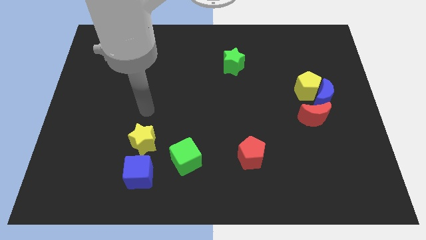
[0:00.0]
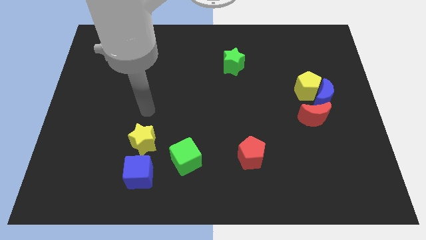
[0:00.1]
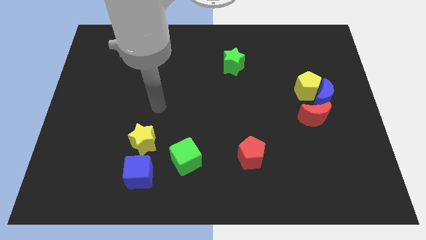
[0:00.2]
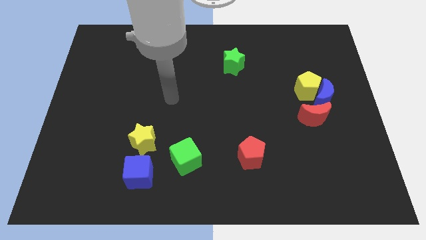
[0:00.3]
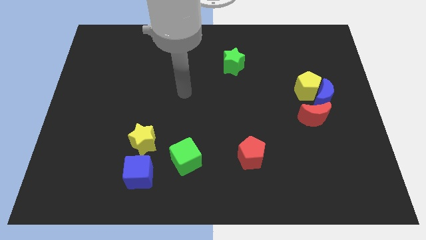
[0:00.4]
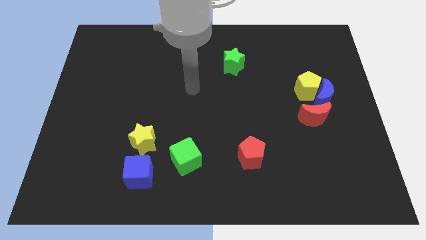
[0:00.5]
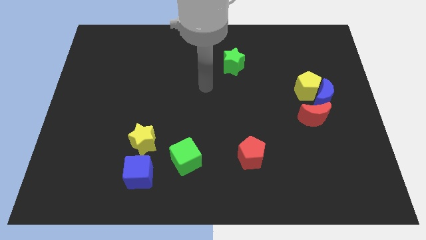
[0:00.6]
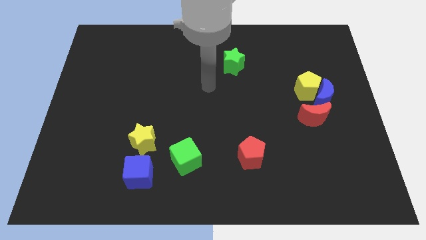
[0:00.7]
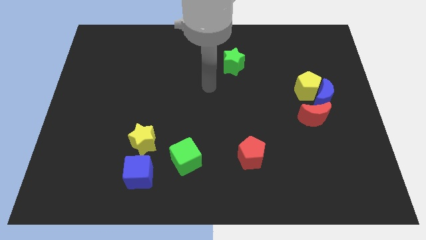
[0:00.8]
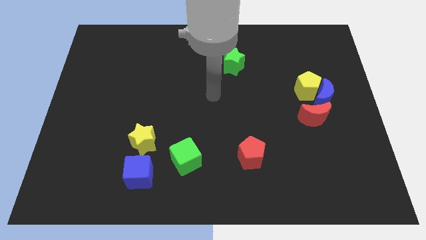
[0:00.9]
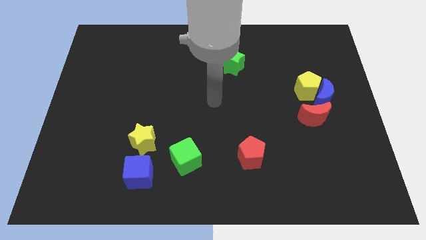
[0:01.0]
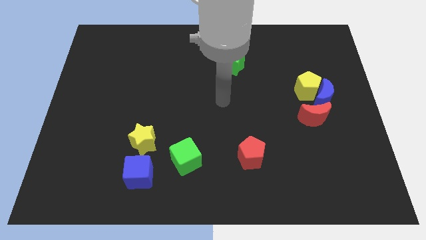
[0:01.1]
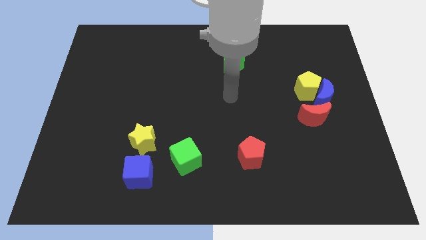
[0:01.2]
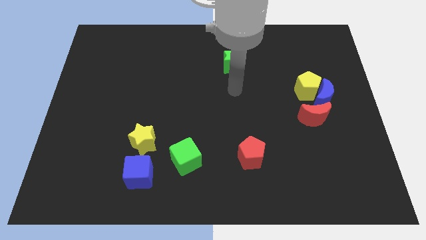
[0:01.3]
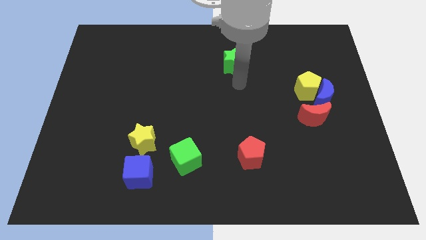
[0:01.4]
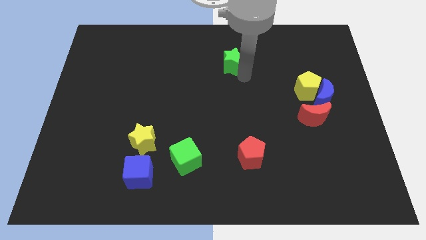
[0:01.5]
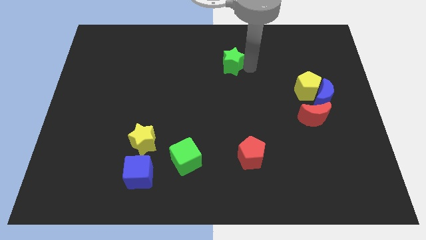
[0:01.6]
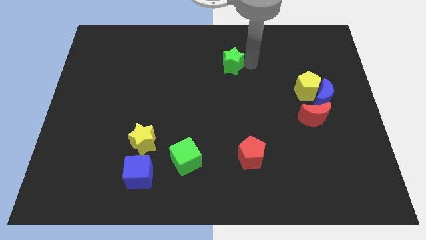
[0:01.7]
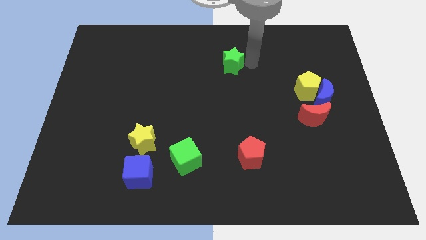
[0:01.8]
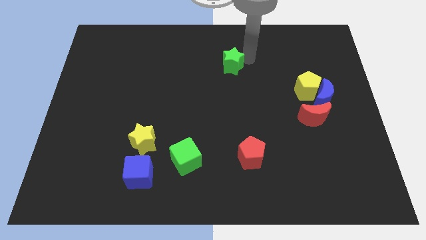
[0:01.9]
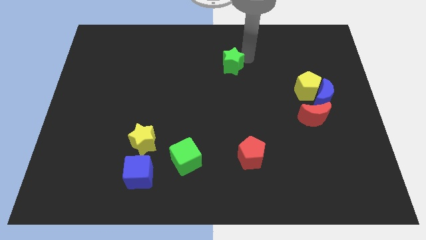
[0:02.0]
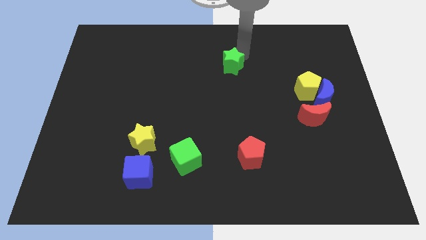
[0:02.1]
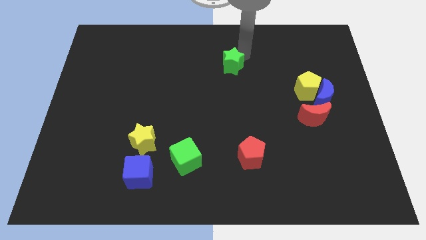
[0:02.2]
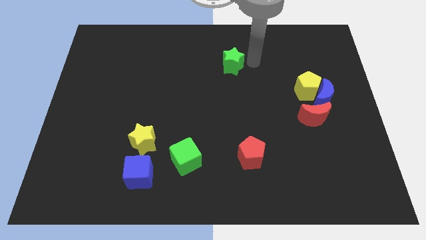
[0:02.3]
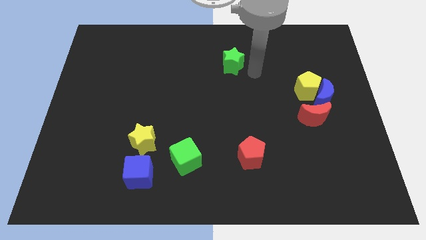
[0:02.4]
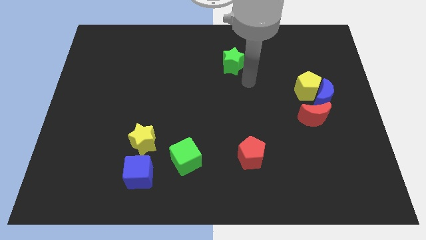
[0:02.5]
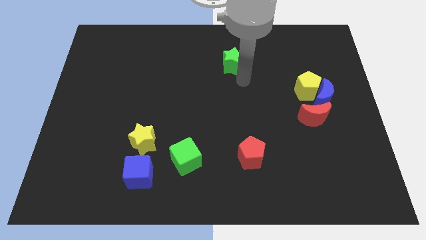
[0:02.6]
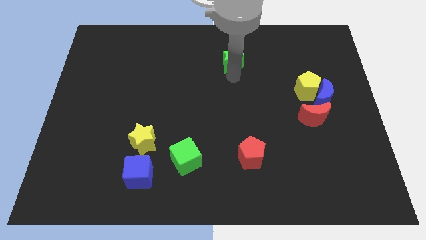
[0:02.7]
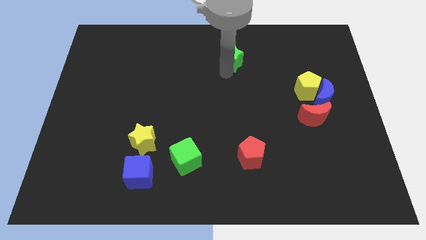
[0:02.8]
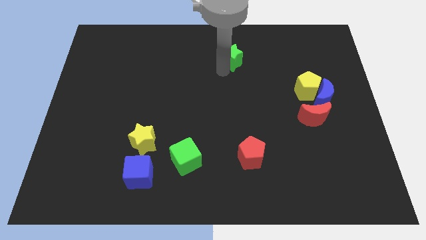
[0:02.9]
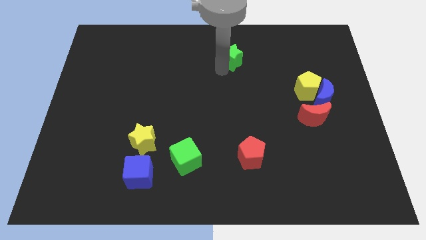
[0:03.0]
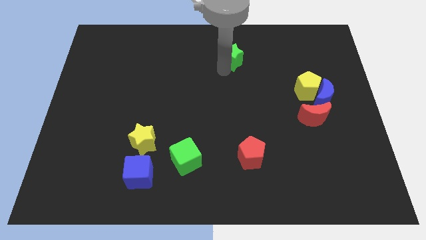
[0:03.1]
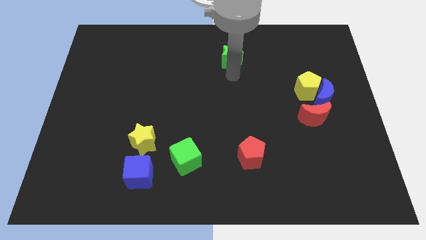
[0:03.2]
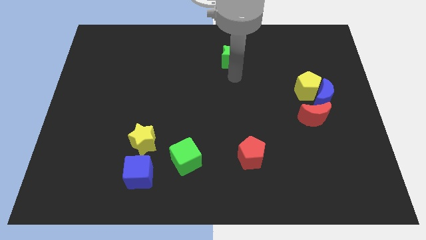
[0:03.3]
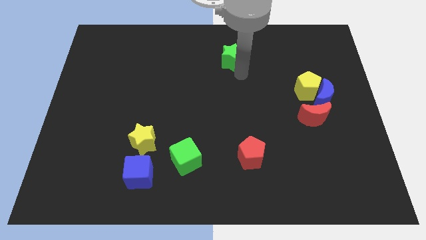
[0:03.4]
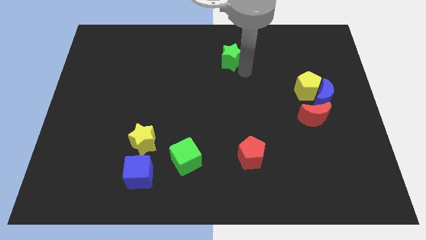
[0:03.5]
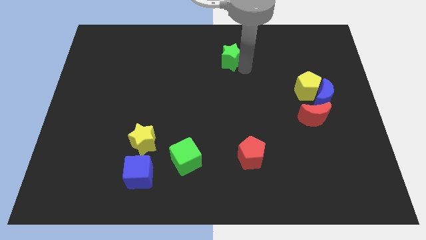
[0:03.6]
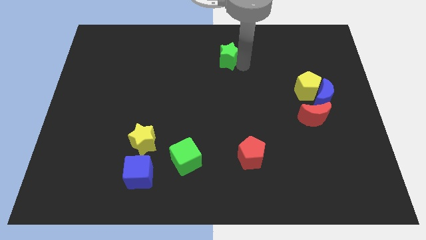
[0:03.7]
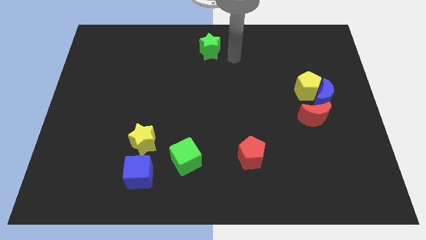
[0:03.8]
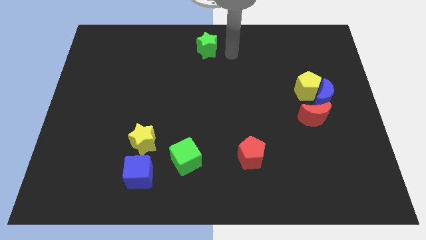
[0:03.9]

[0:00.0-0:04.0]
move the green star towards the top center of the board

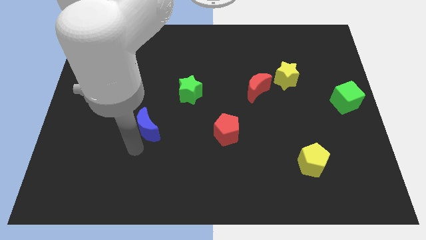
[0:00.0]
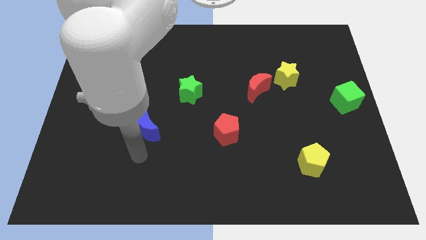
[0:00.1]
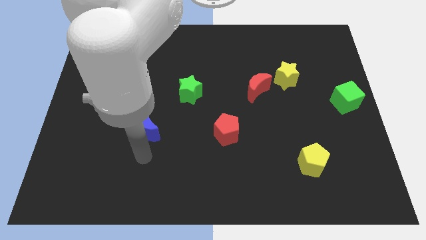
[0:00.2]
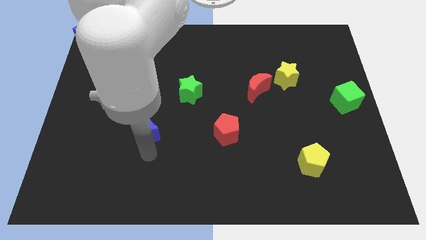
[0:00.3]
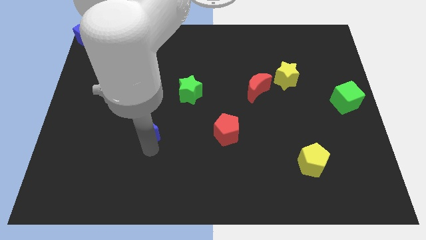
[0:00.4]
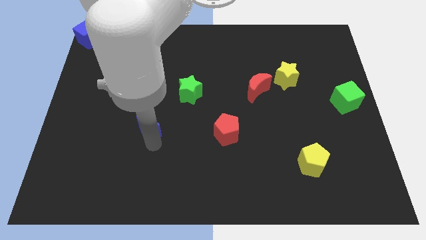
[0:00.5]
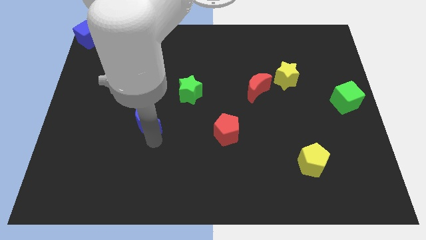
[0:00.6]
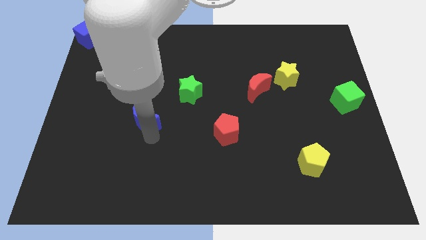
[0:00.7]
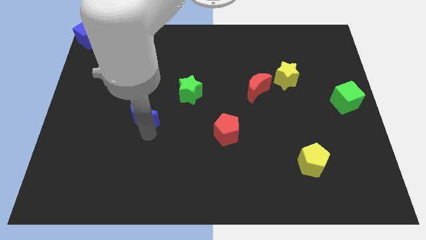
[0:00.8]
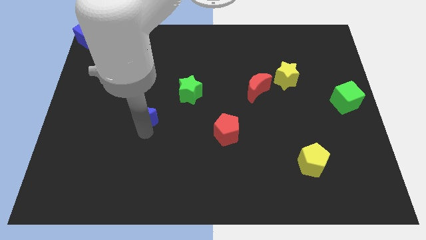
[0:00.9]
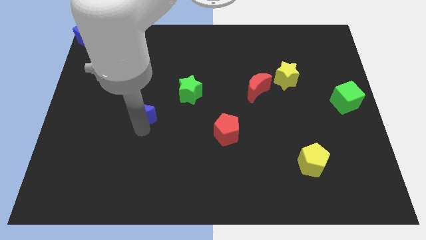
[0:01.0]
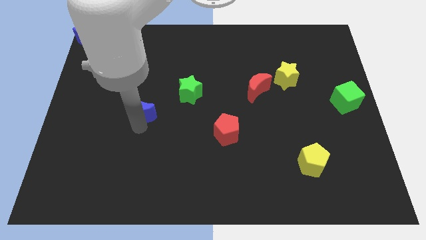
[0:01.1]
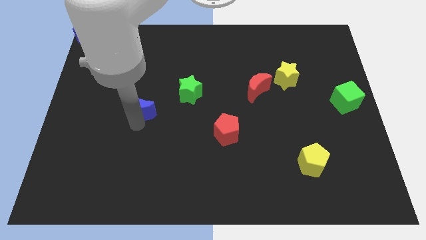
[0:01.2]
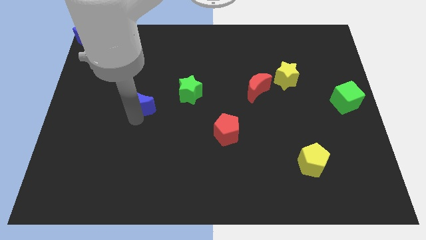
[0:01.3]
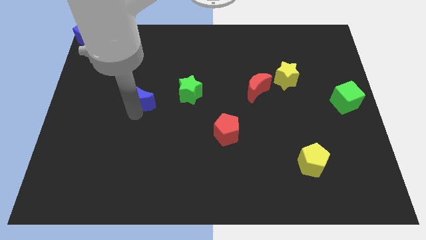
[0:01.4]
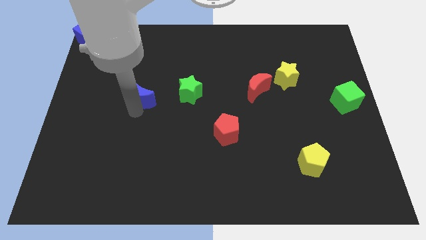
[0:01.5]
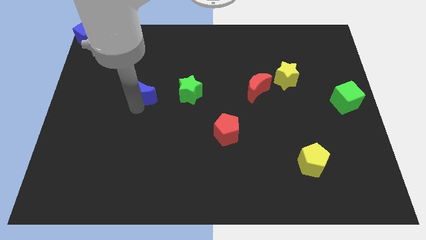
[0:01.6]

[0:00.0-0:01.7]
move the blue crescent towards the left of the green star

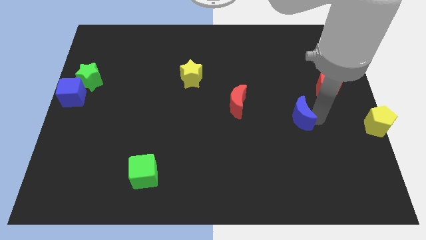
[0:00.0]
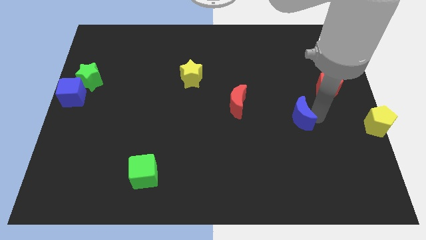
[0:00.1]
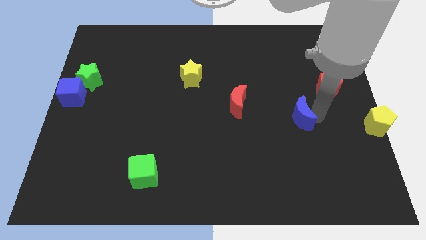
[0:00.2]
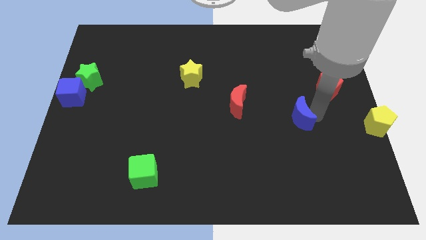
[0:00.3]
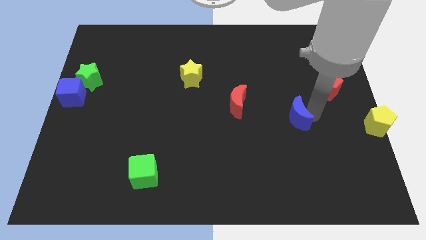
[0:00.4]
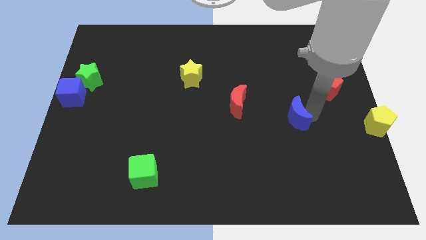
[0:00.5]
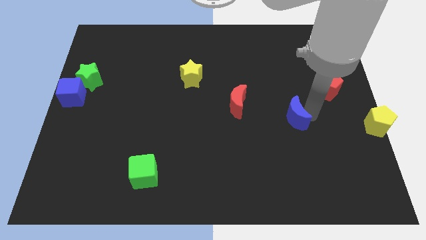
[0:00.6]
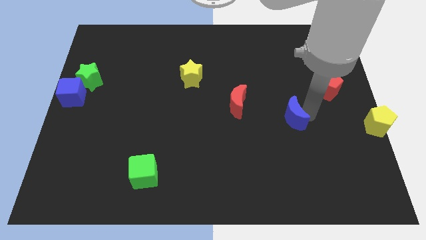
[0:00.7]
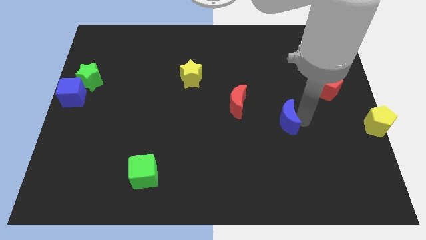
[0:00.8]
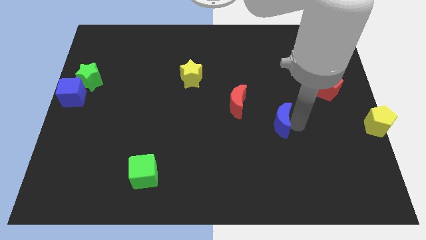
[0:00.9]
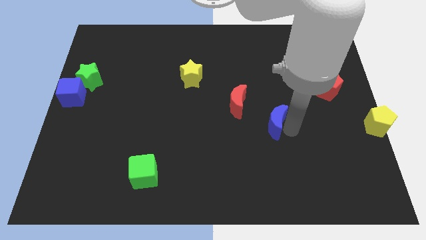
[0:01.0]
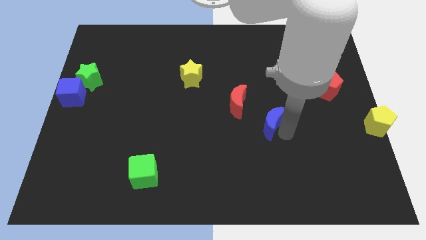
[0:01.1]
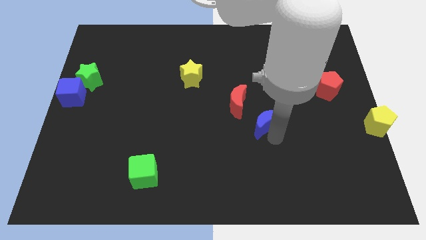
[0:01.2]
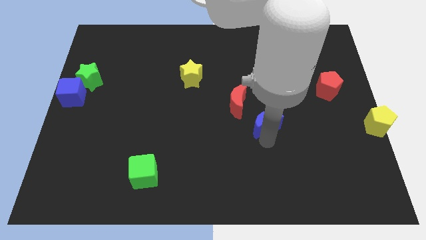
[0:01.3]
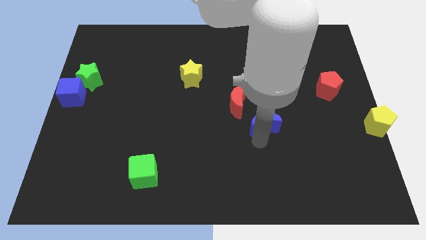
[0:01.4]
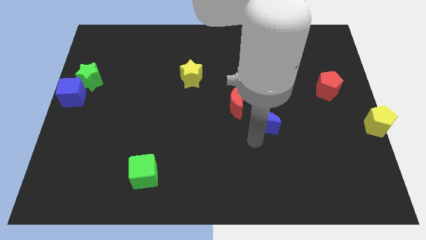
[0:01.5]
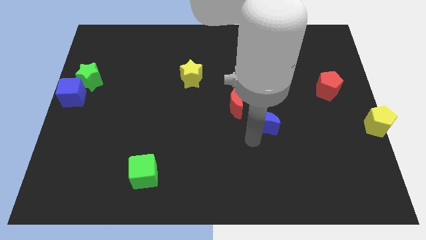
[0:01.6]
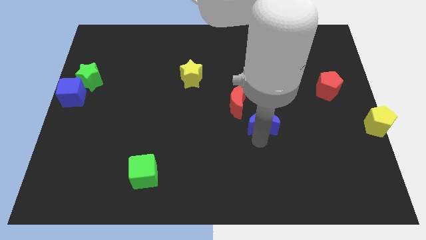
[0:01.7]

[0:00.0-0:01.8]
push the blue moon away from the middle of red moon and yellow pentagon

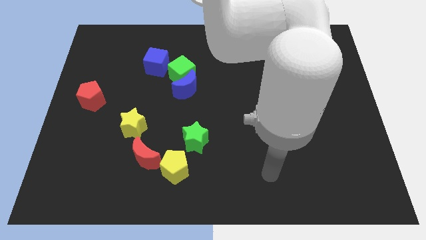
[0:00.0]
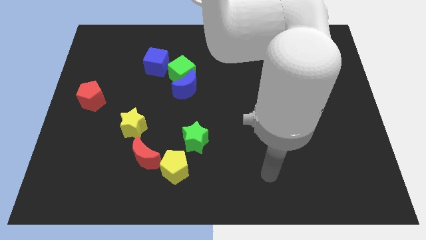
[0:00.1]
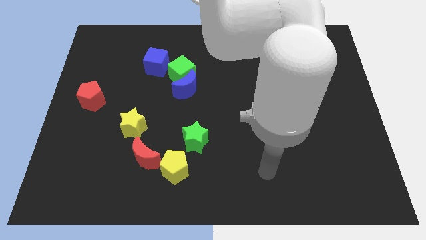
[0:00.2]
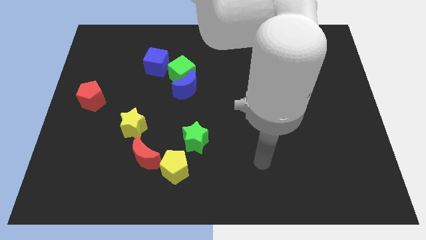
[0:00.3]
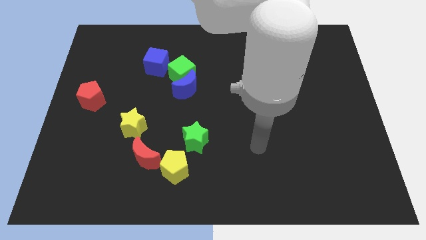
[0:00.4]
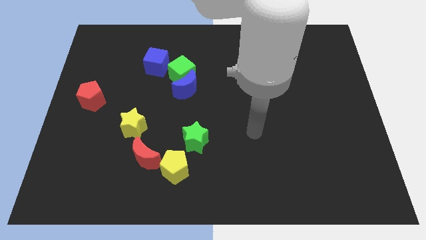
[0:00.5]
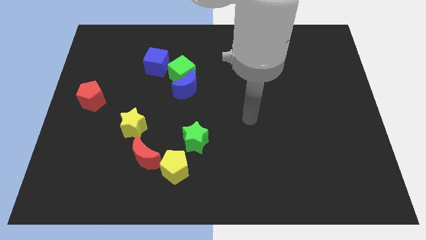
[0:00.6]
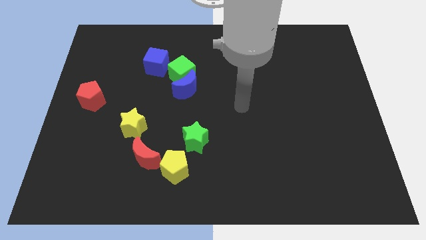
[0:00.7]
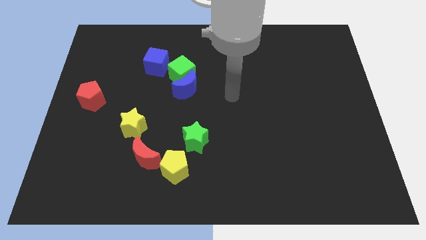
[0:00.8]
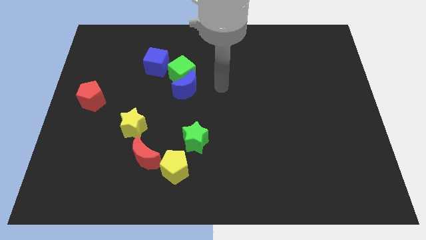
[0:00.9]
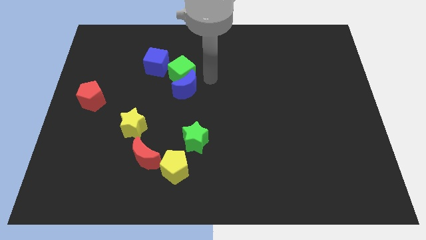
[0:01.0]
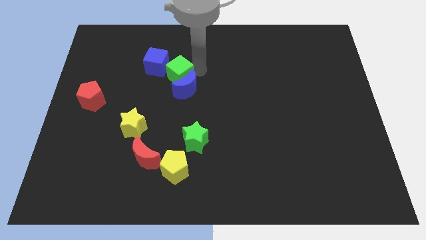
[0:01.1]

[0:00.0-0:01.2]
point your arm at the right of the green cube

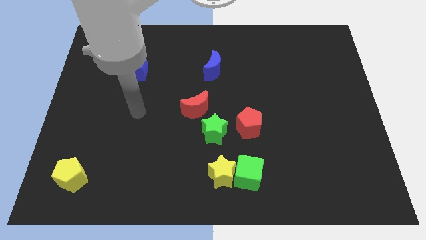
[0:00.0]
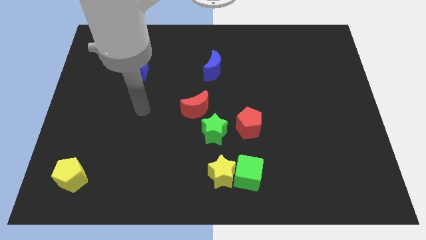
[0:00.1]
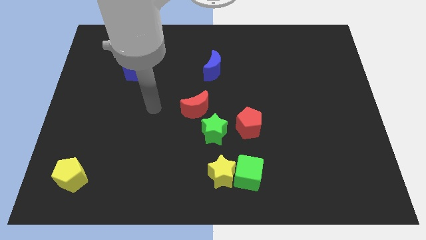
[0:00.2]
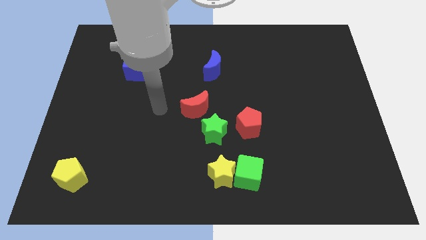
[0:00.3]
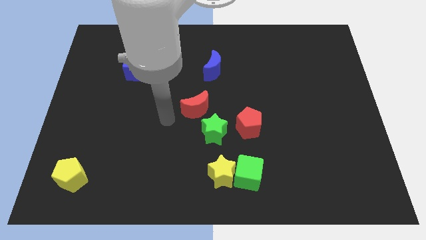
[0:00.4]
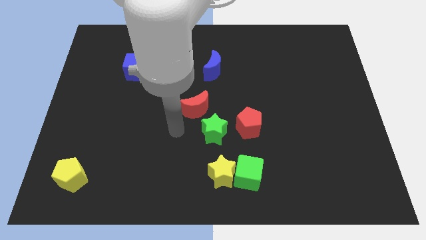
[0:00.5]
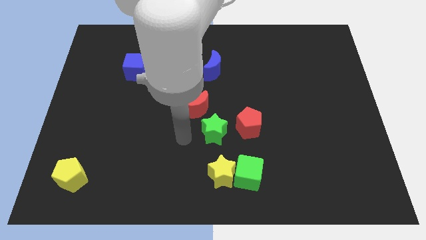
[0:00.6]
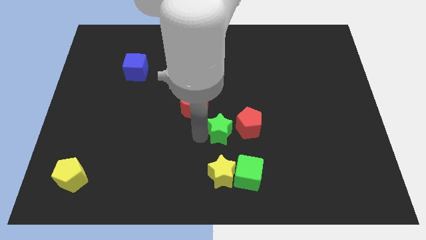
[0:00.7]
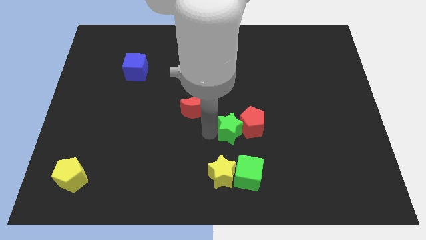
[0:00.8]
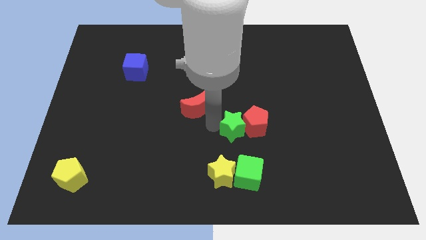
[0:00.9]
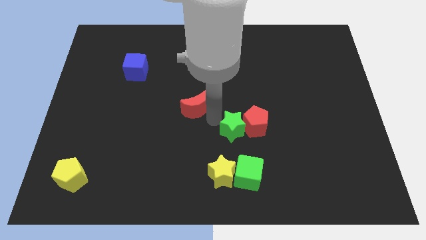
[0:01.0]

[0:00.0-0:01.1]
slide the green star into red pentagon
